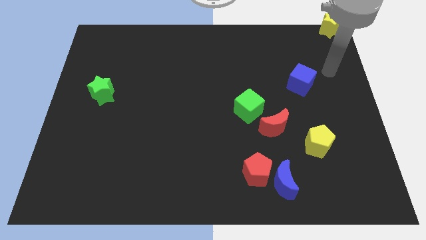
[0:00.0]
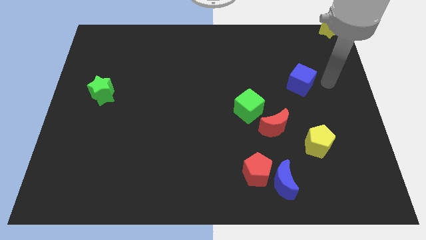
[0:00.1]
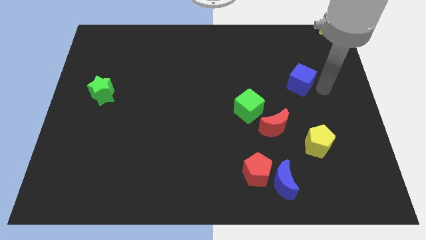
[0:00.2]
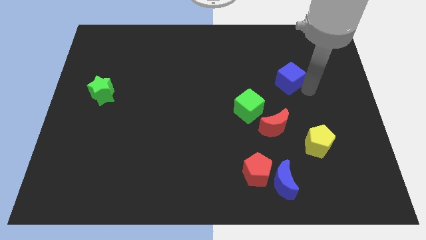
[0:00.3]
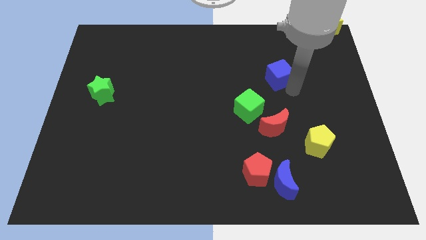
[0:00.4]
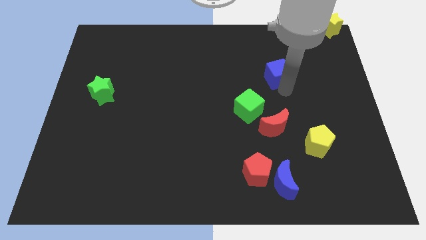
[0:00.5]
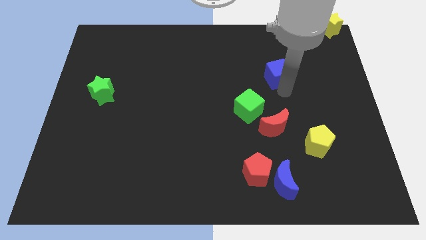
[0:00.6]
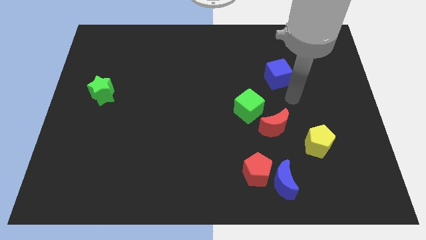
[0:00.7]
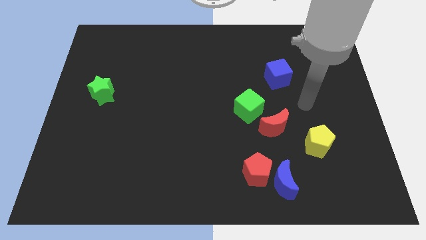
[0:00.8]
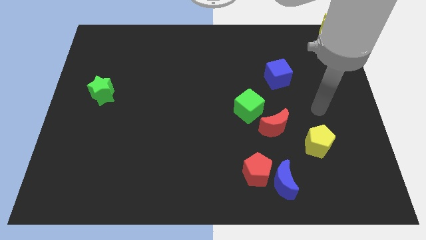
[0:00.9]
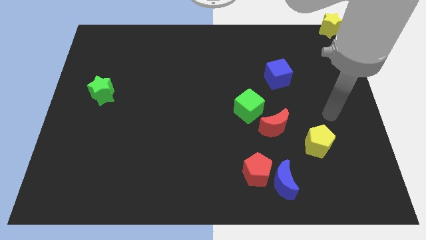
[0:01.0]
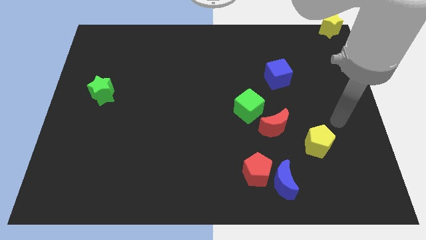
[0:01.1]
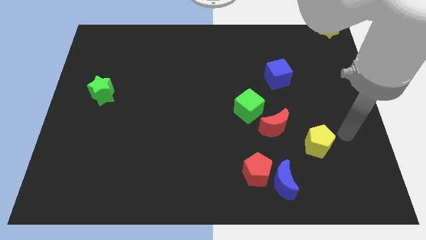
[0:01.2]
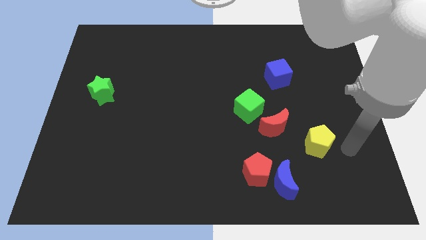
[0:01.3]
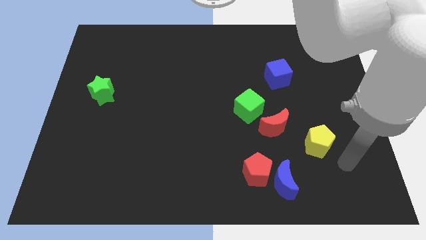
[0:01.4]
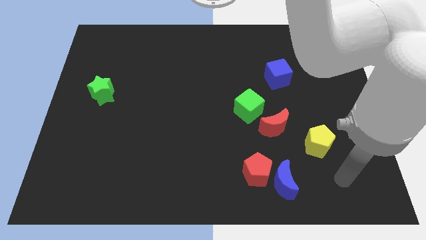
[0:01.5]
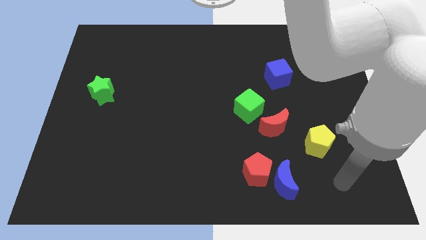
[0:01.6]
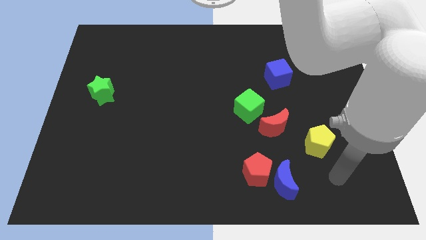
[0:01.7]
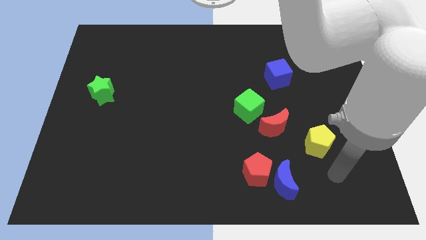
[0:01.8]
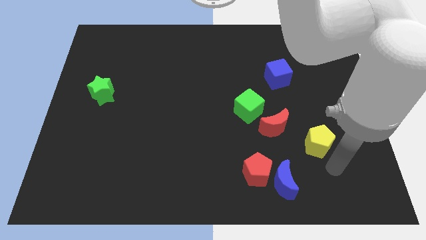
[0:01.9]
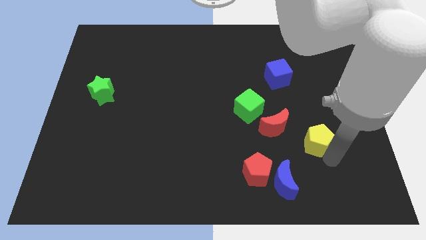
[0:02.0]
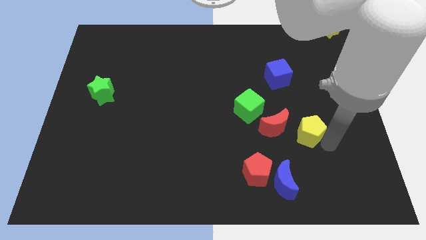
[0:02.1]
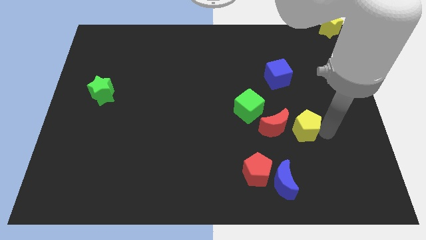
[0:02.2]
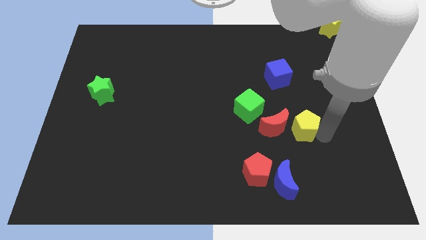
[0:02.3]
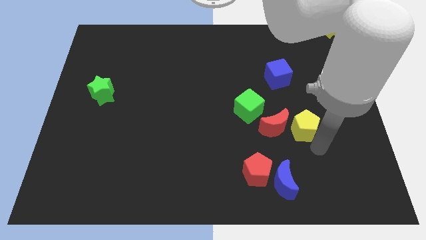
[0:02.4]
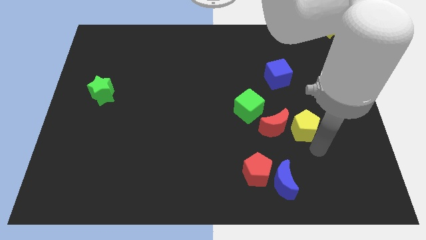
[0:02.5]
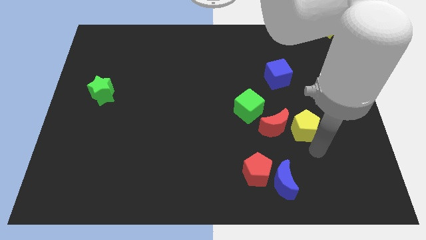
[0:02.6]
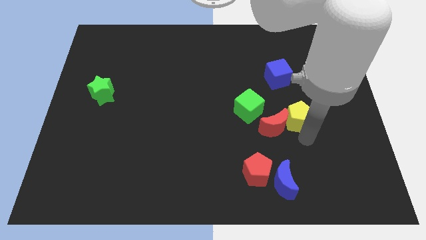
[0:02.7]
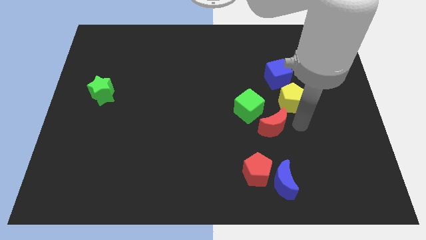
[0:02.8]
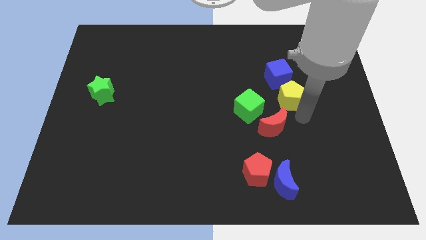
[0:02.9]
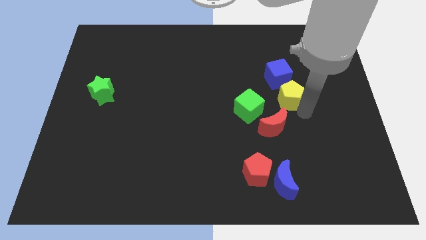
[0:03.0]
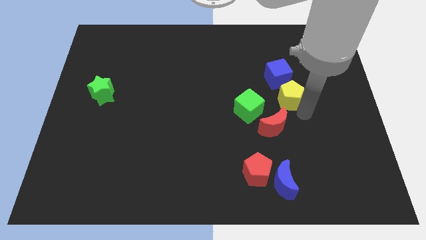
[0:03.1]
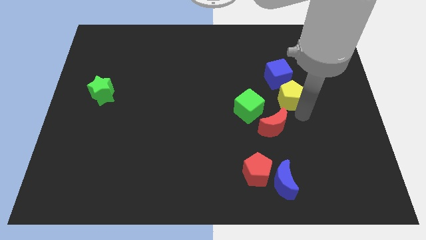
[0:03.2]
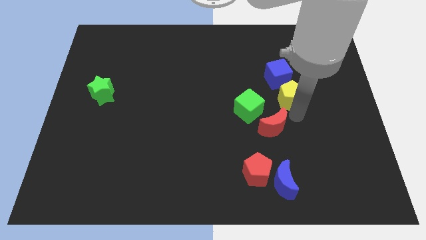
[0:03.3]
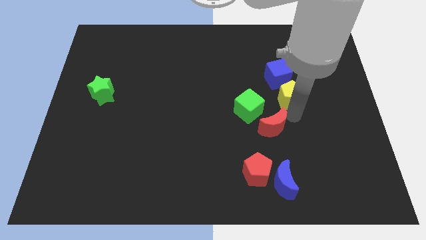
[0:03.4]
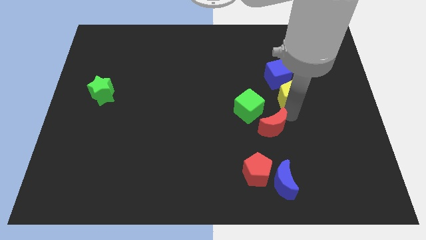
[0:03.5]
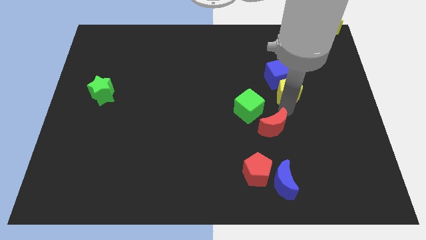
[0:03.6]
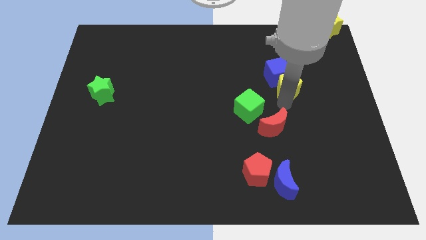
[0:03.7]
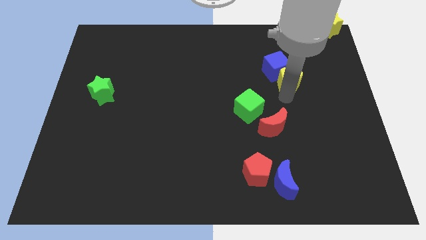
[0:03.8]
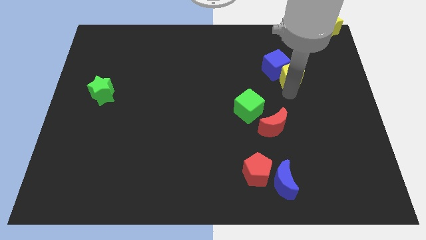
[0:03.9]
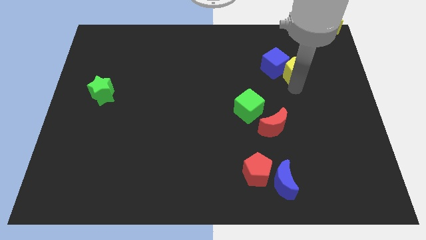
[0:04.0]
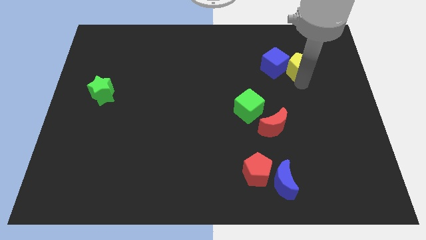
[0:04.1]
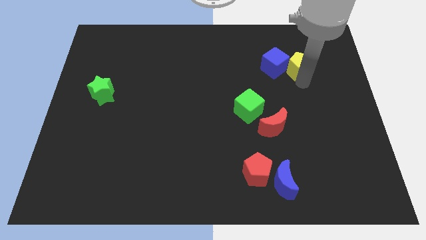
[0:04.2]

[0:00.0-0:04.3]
move the yellow pentagon to right side of blue cube

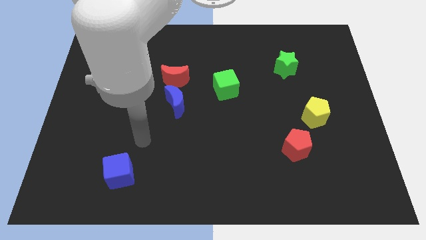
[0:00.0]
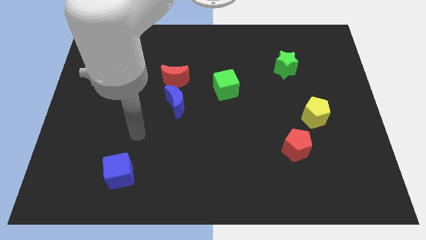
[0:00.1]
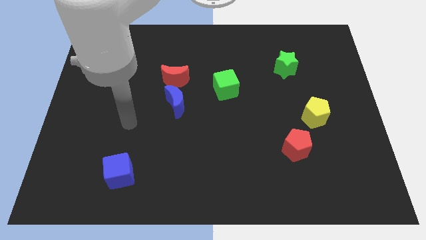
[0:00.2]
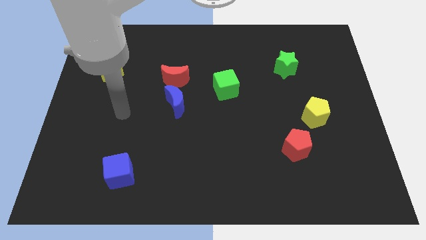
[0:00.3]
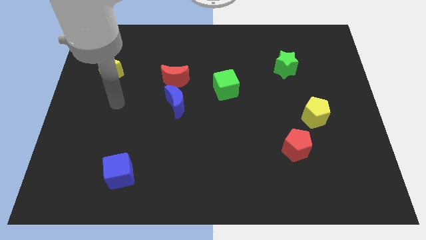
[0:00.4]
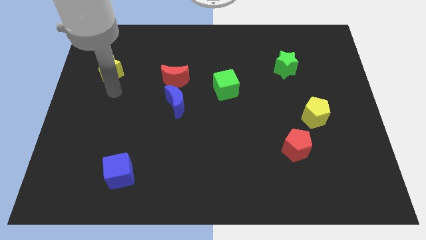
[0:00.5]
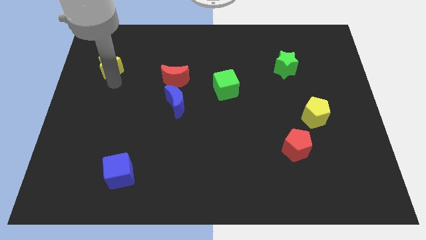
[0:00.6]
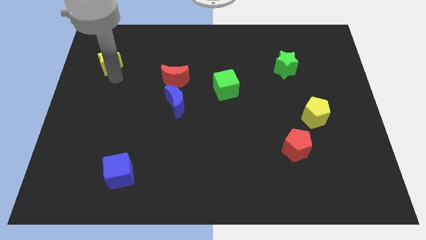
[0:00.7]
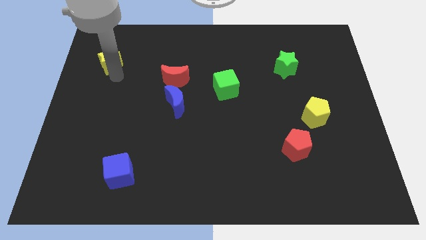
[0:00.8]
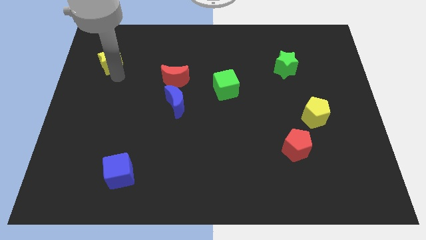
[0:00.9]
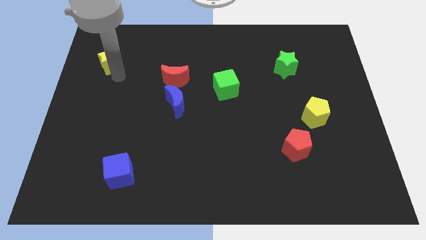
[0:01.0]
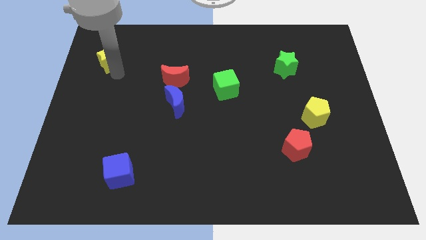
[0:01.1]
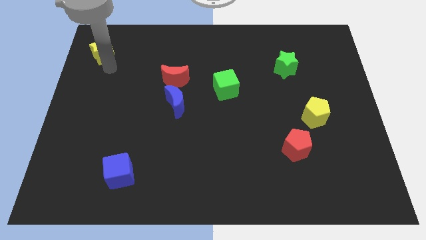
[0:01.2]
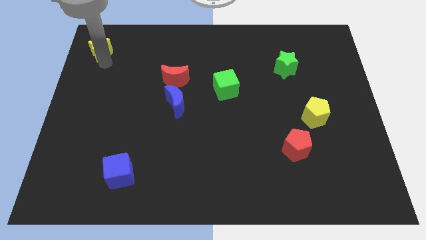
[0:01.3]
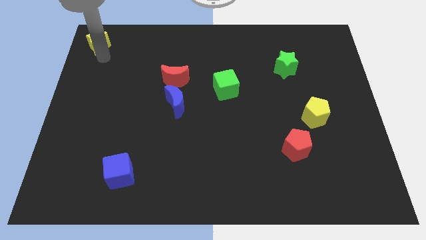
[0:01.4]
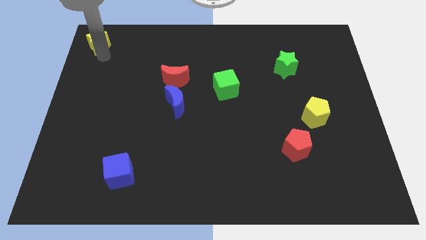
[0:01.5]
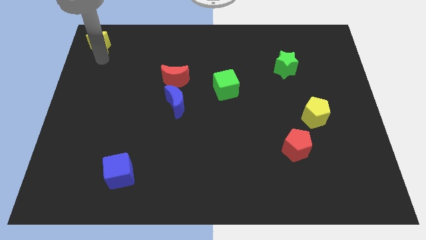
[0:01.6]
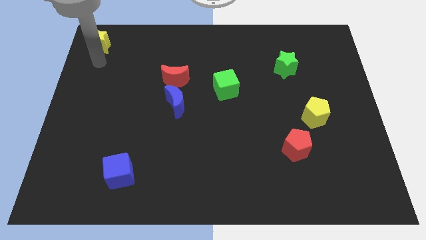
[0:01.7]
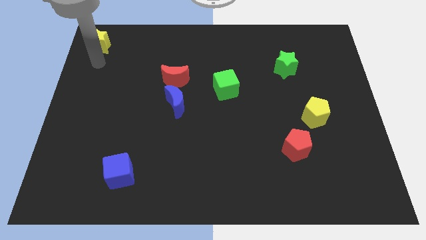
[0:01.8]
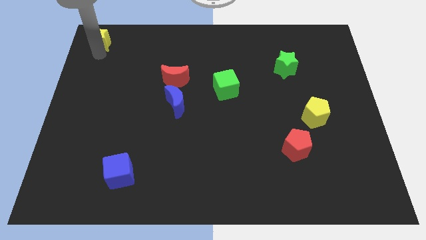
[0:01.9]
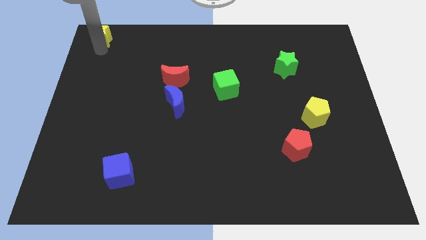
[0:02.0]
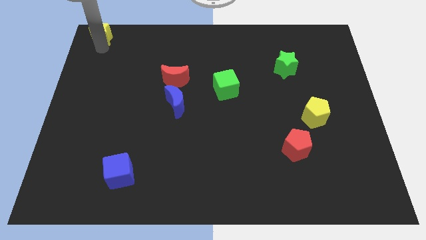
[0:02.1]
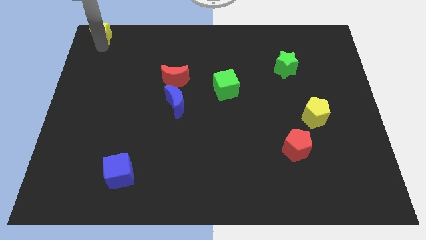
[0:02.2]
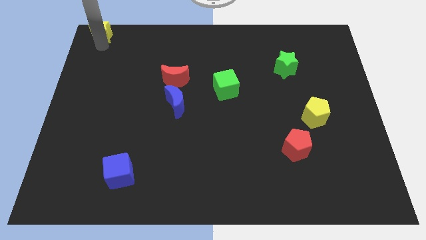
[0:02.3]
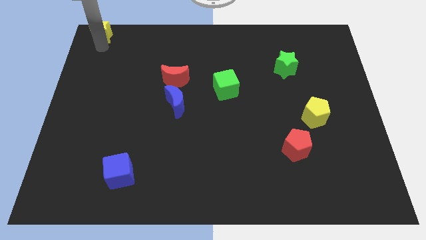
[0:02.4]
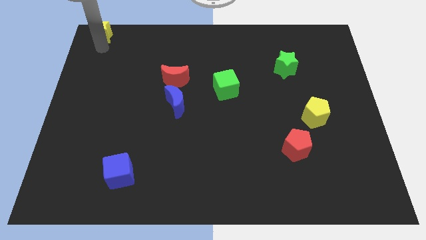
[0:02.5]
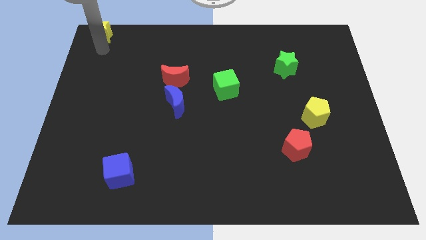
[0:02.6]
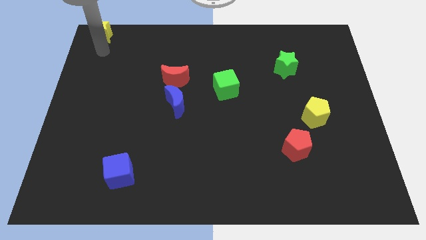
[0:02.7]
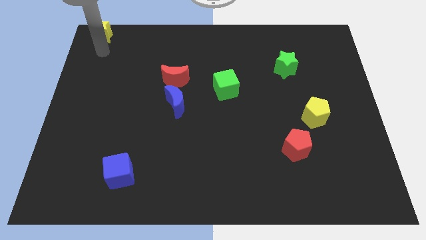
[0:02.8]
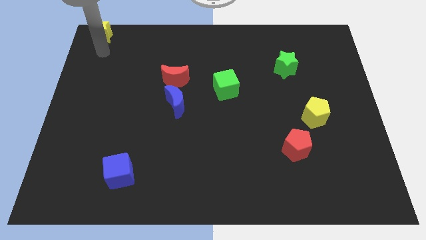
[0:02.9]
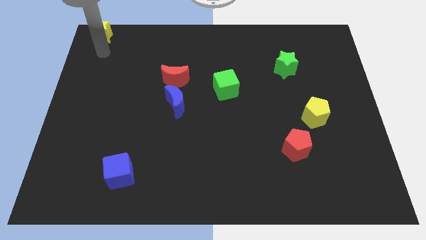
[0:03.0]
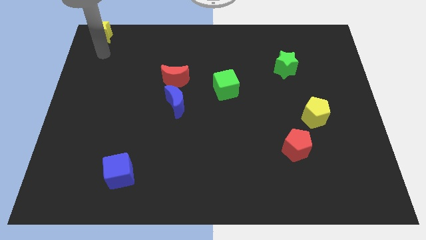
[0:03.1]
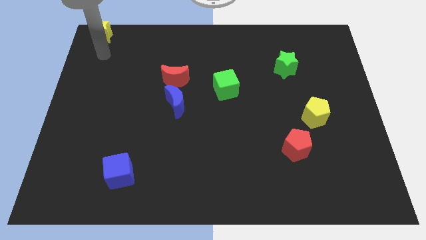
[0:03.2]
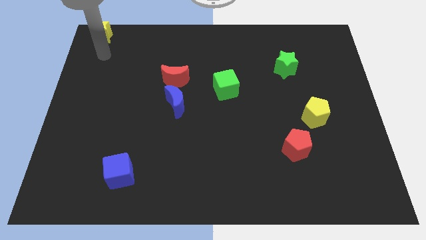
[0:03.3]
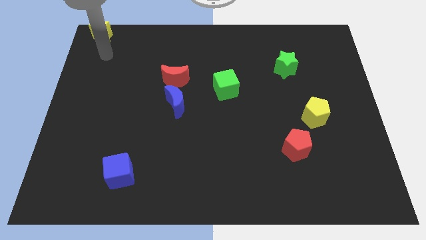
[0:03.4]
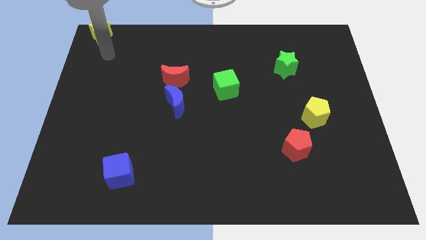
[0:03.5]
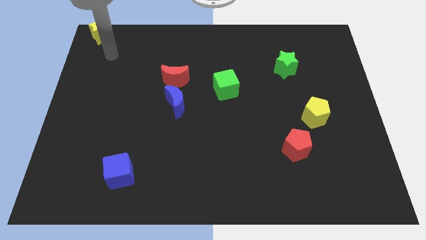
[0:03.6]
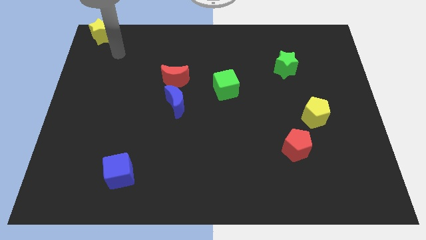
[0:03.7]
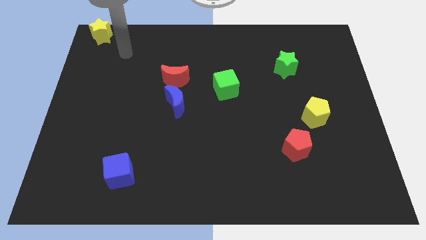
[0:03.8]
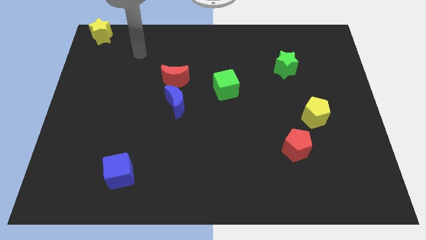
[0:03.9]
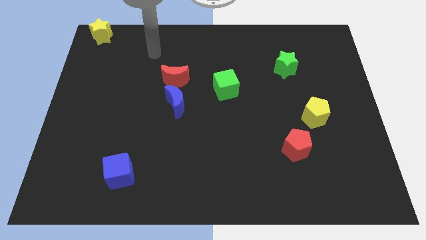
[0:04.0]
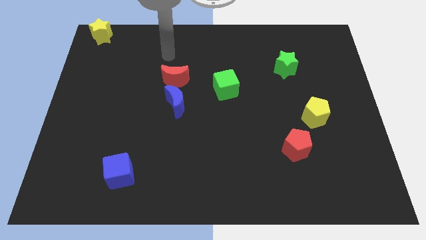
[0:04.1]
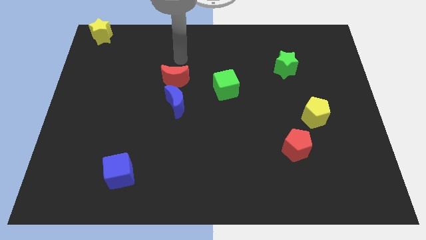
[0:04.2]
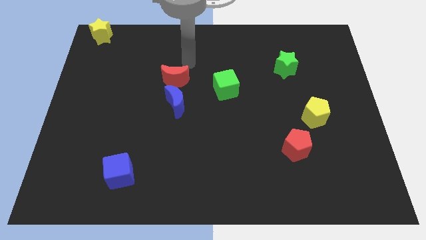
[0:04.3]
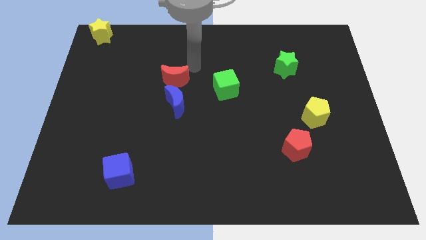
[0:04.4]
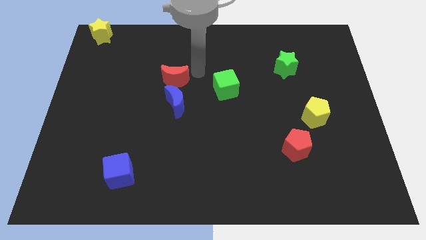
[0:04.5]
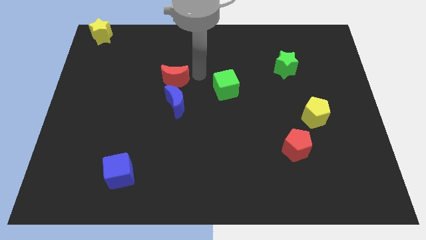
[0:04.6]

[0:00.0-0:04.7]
place the yellow star towards the top left corner of the board

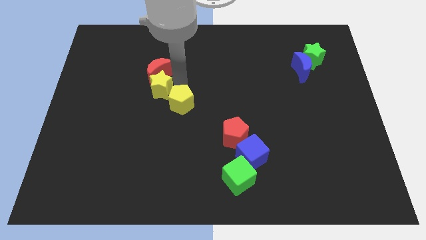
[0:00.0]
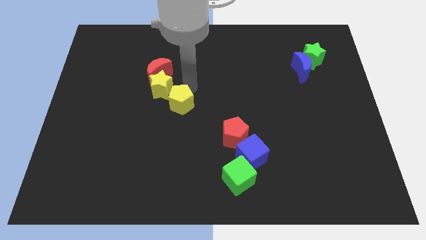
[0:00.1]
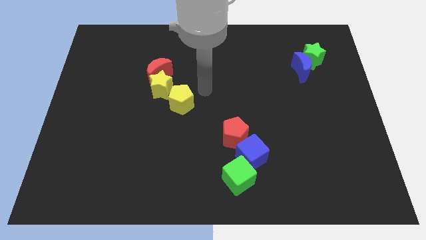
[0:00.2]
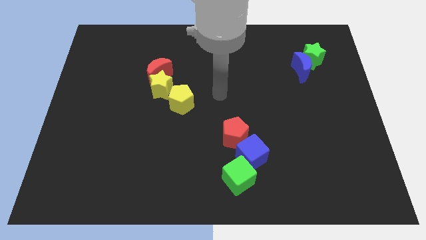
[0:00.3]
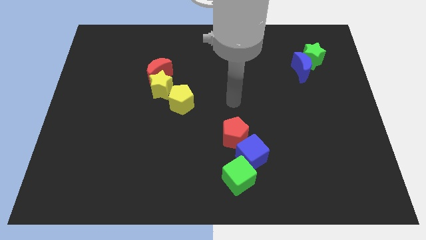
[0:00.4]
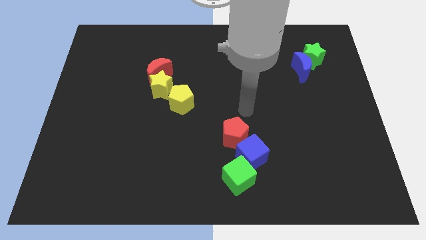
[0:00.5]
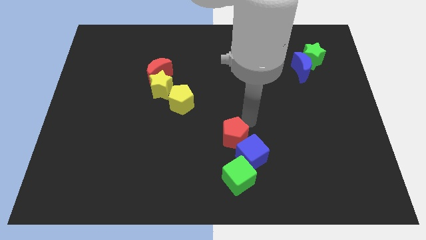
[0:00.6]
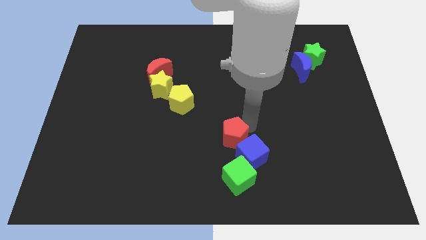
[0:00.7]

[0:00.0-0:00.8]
point your arm to the right side of red pentagon
